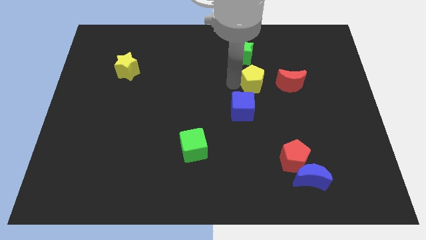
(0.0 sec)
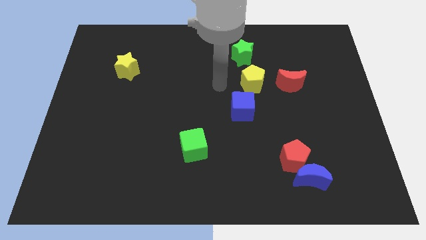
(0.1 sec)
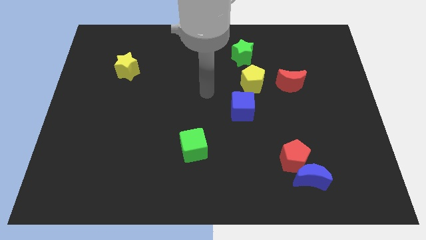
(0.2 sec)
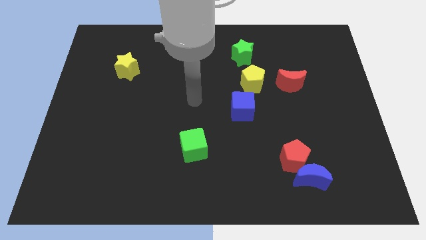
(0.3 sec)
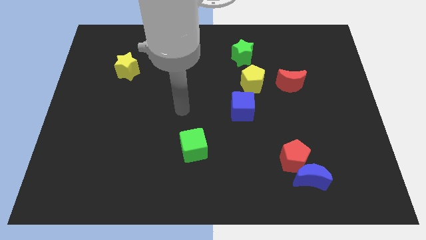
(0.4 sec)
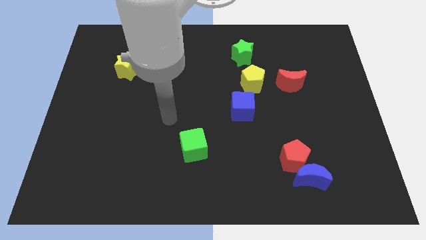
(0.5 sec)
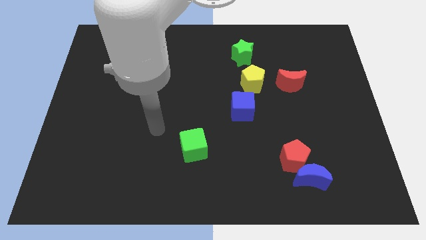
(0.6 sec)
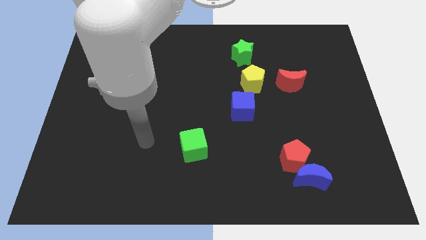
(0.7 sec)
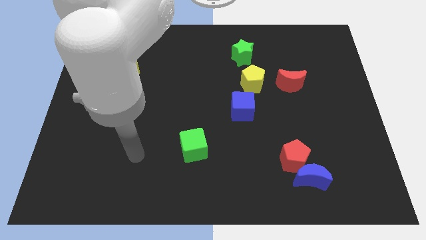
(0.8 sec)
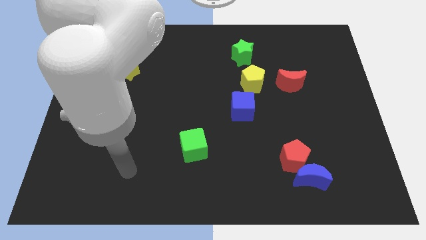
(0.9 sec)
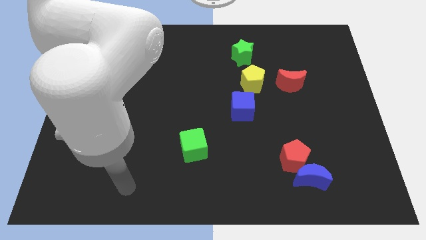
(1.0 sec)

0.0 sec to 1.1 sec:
go away from the yellow pentagon

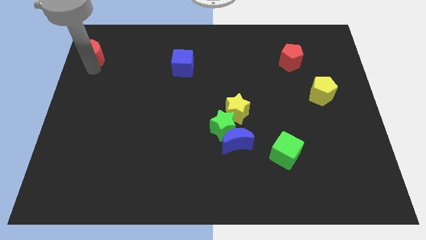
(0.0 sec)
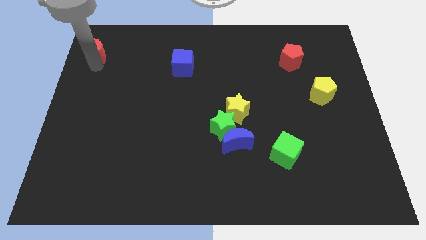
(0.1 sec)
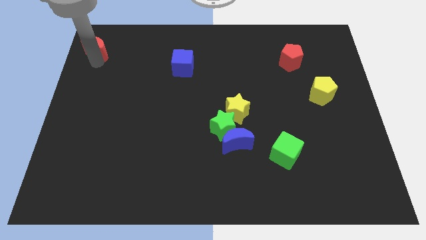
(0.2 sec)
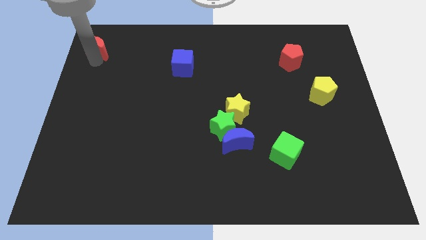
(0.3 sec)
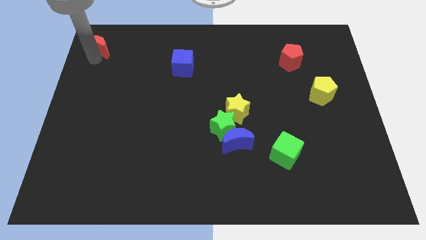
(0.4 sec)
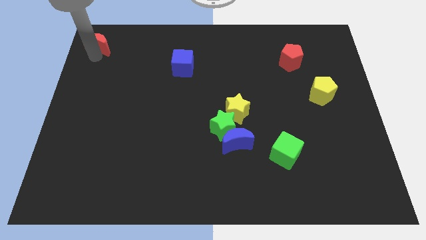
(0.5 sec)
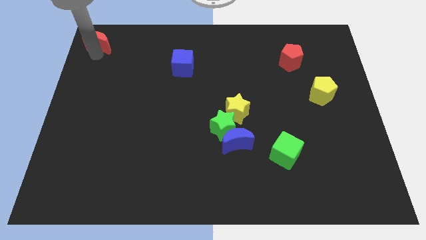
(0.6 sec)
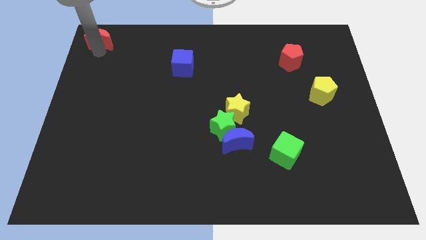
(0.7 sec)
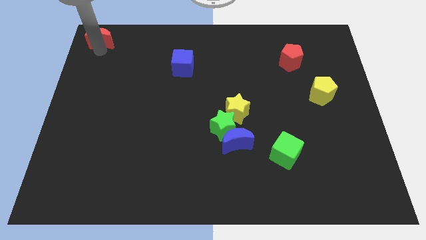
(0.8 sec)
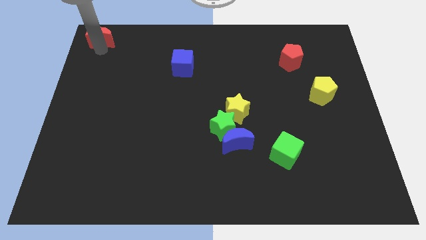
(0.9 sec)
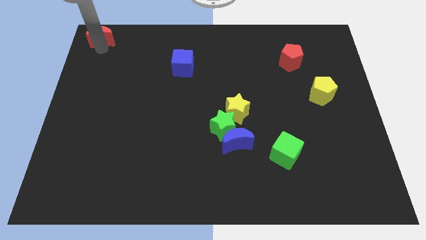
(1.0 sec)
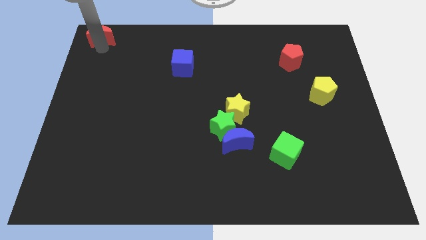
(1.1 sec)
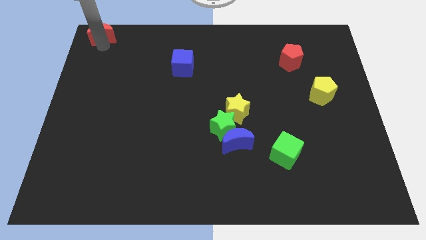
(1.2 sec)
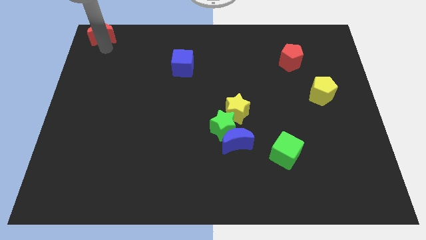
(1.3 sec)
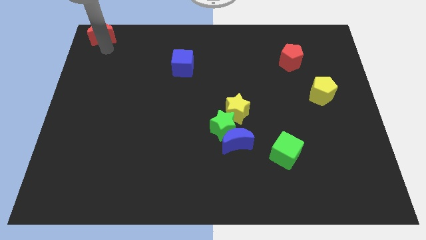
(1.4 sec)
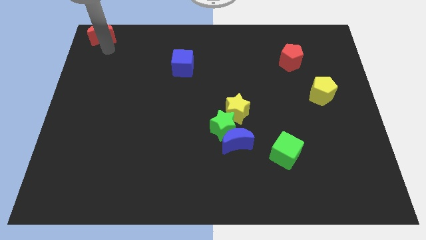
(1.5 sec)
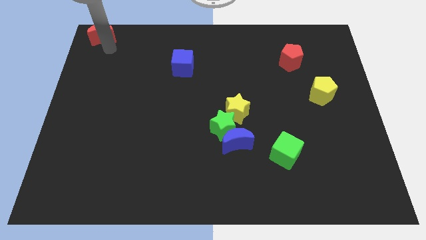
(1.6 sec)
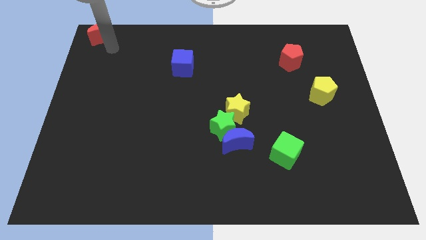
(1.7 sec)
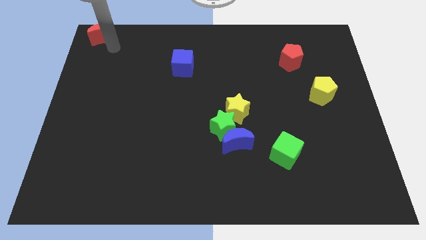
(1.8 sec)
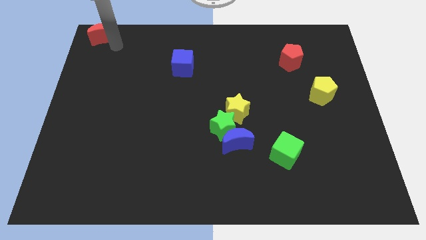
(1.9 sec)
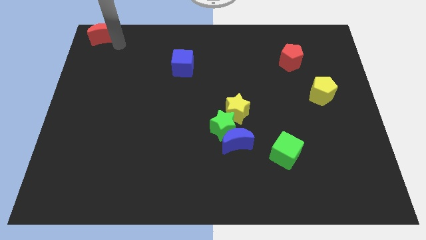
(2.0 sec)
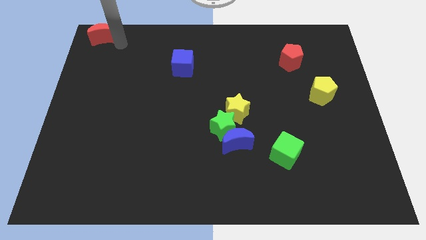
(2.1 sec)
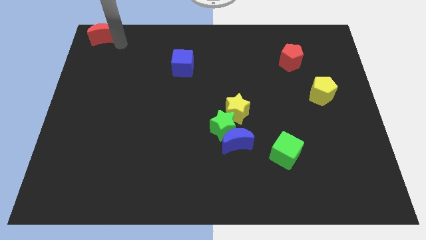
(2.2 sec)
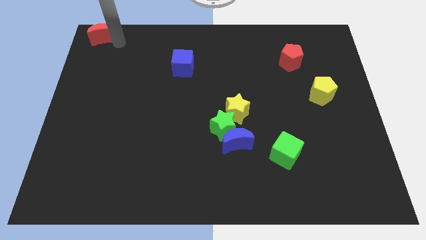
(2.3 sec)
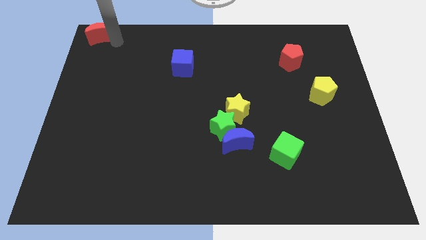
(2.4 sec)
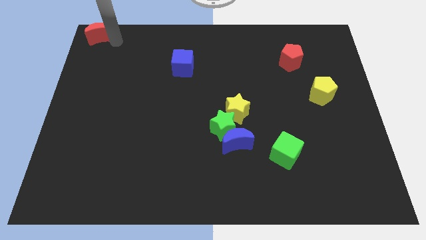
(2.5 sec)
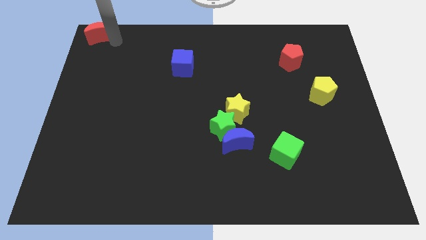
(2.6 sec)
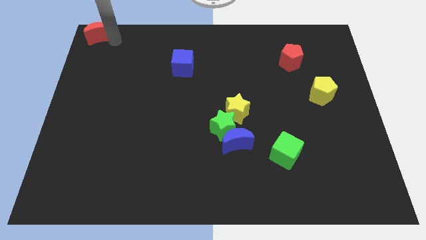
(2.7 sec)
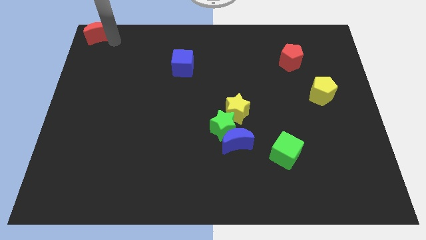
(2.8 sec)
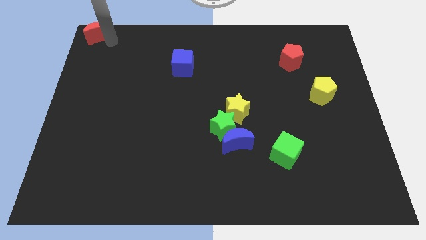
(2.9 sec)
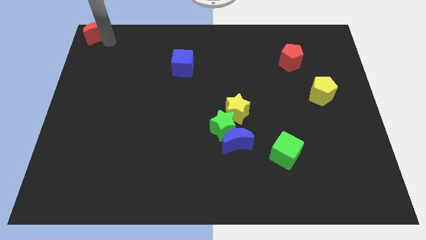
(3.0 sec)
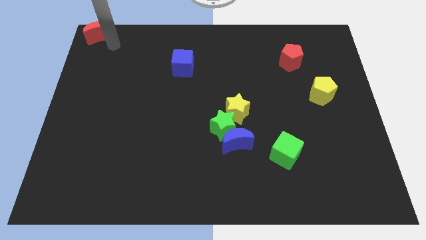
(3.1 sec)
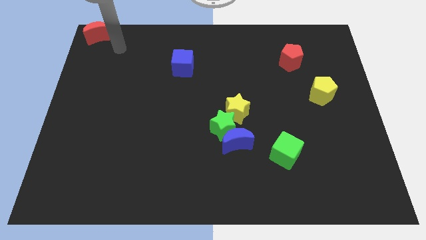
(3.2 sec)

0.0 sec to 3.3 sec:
place the red moon to the top left corner side

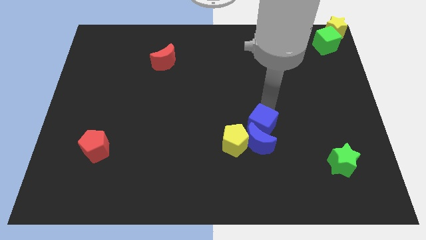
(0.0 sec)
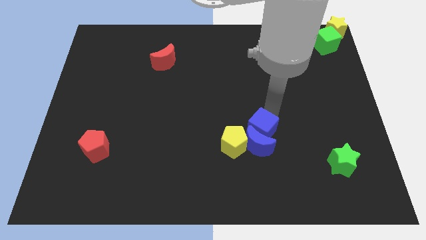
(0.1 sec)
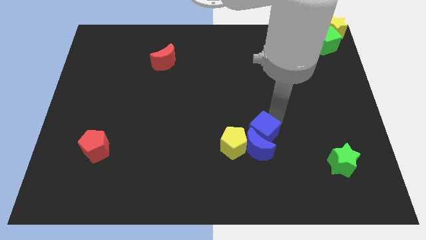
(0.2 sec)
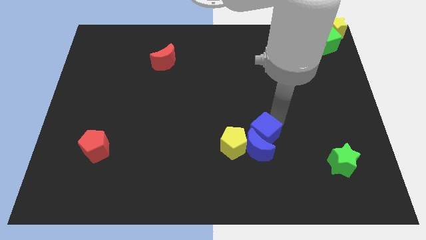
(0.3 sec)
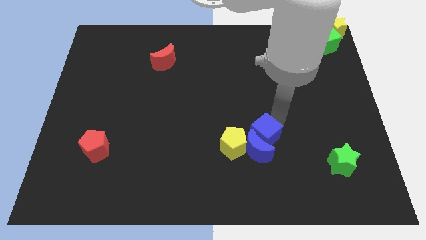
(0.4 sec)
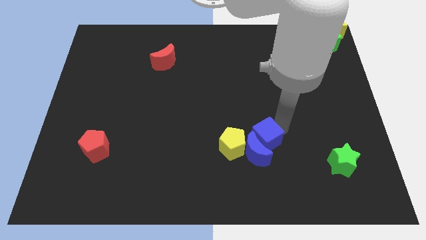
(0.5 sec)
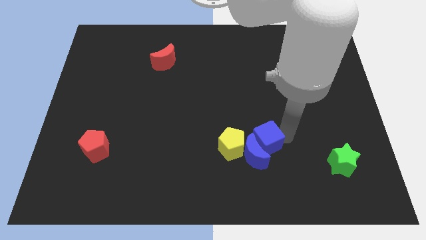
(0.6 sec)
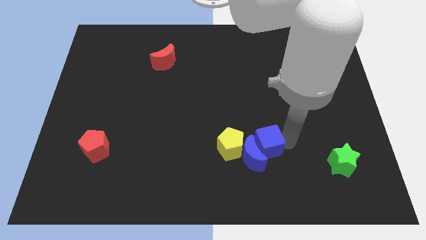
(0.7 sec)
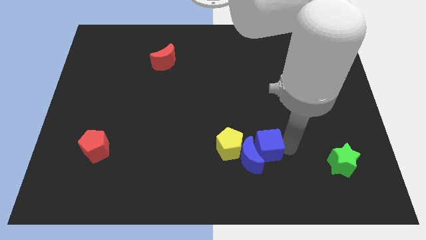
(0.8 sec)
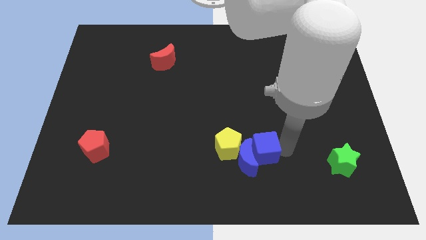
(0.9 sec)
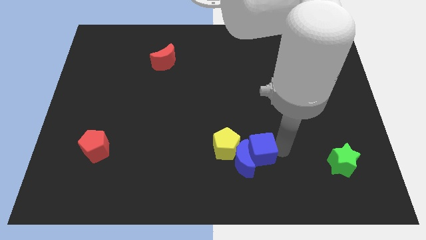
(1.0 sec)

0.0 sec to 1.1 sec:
move the blue cube to the right of the blue crescent

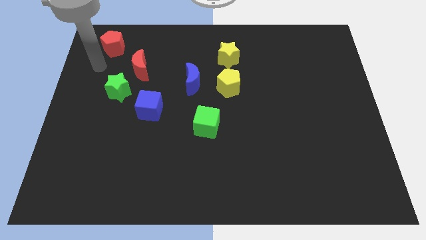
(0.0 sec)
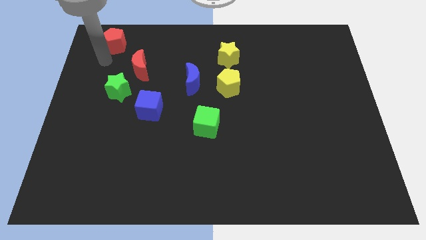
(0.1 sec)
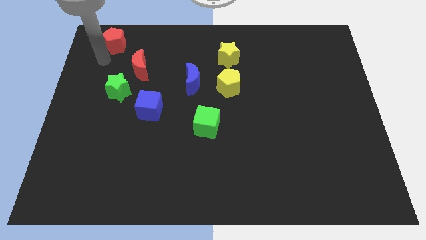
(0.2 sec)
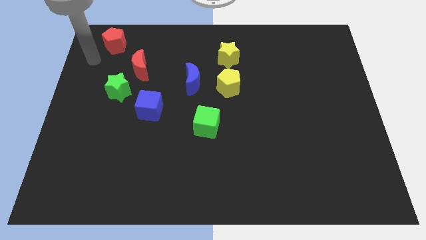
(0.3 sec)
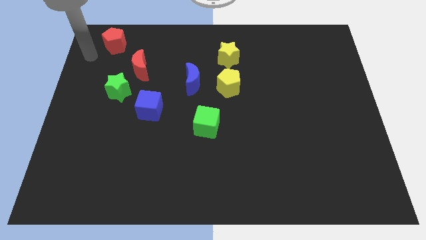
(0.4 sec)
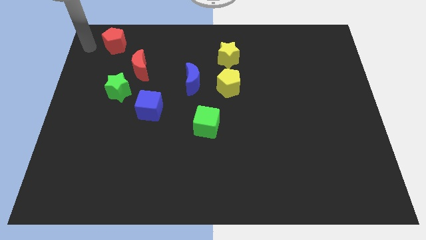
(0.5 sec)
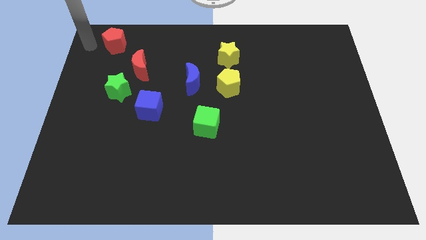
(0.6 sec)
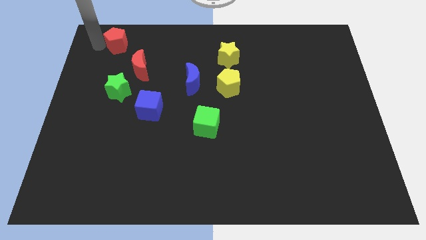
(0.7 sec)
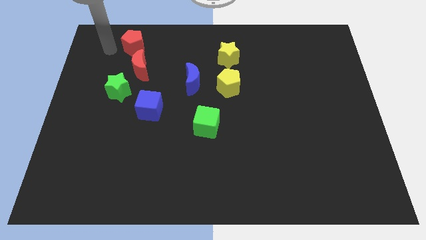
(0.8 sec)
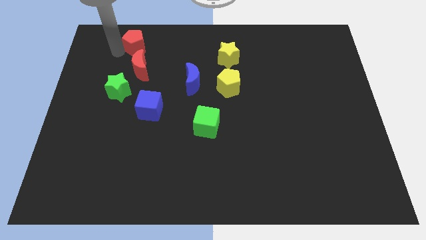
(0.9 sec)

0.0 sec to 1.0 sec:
push red pentagon above red crescent

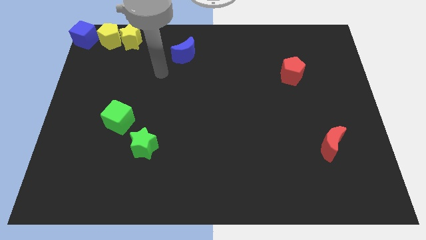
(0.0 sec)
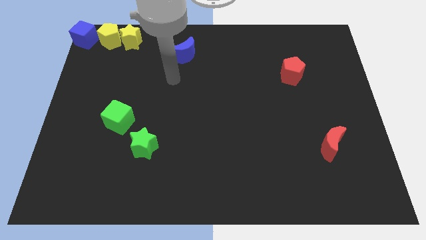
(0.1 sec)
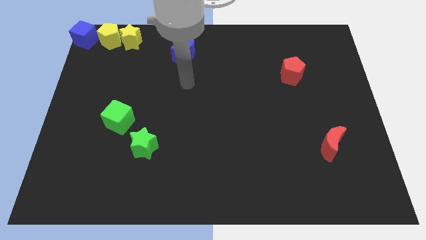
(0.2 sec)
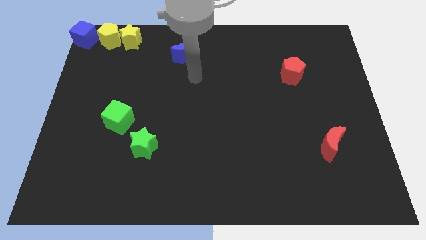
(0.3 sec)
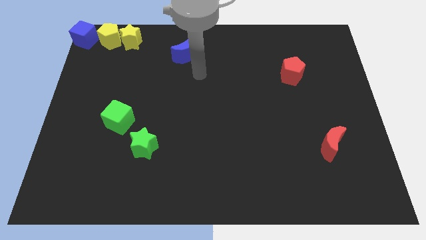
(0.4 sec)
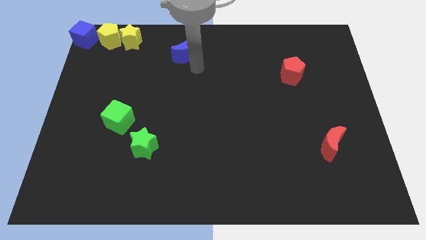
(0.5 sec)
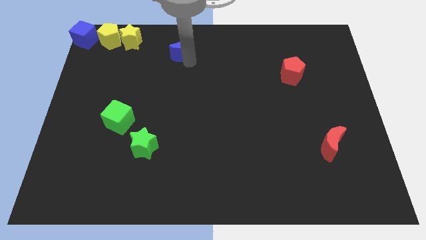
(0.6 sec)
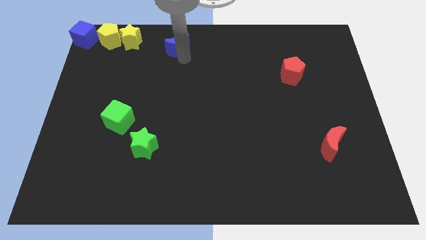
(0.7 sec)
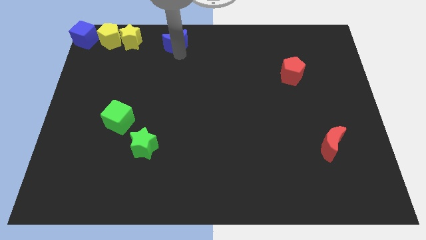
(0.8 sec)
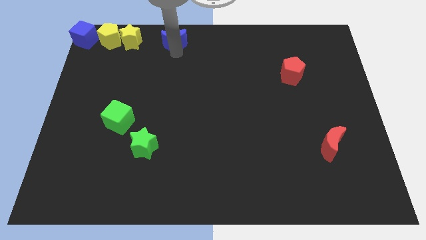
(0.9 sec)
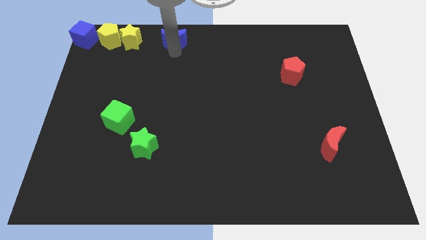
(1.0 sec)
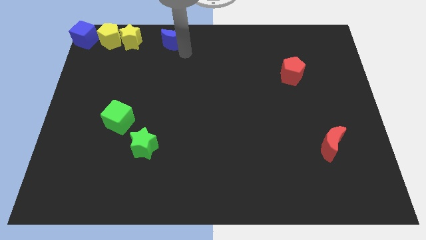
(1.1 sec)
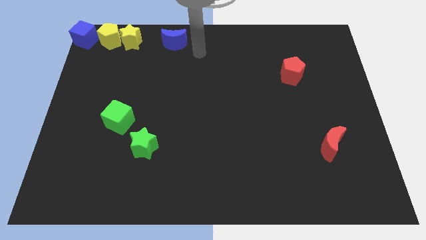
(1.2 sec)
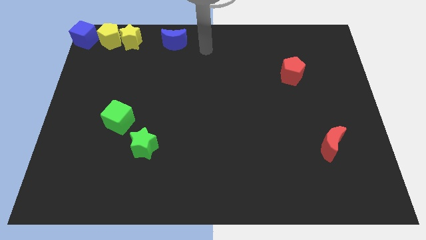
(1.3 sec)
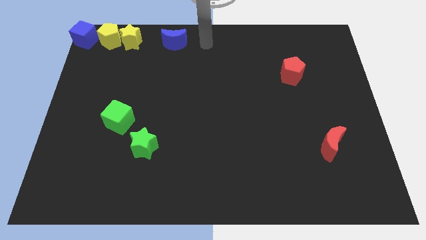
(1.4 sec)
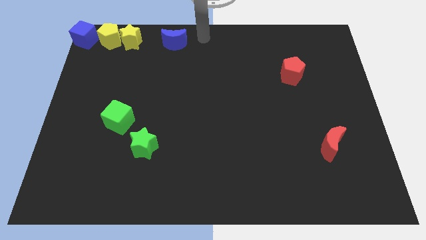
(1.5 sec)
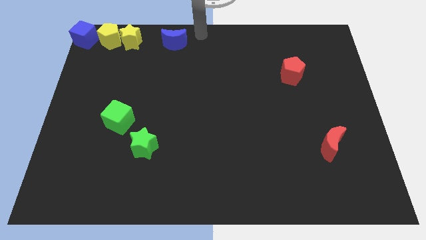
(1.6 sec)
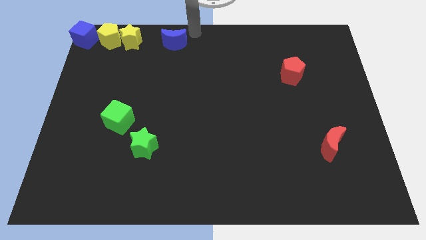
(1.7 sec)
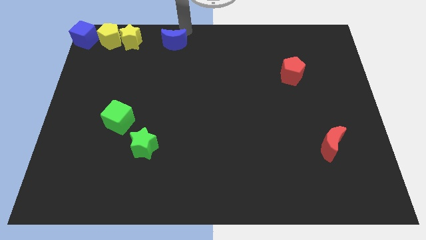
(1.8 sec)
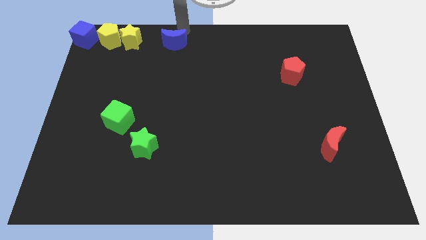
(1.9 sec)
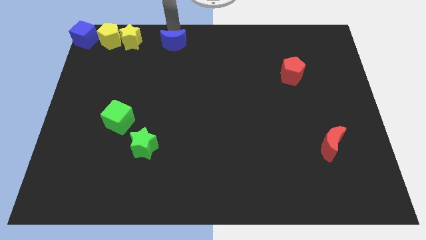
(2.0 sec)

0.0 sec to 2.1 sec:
move the blue crescent towards up

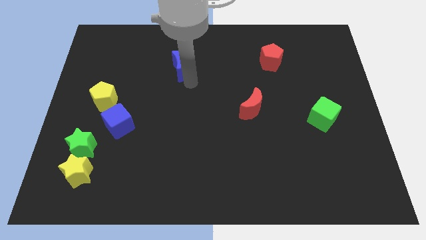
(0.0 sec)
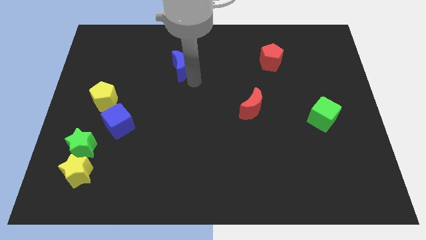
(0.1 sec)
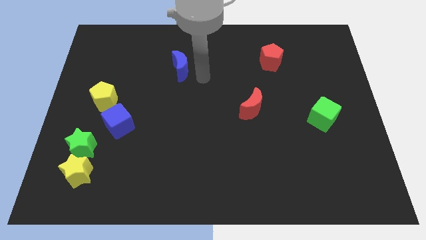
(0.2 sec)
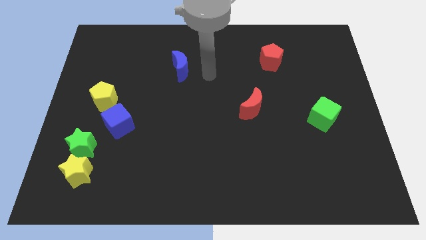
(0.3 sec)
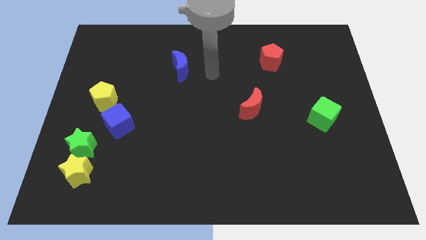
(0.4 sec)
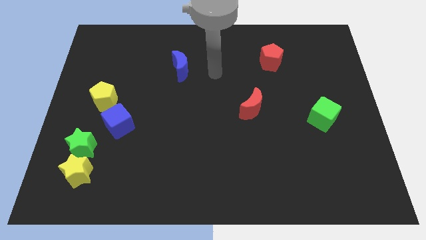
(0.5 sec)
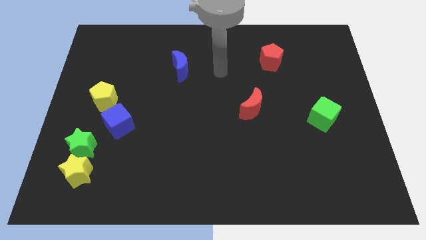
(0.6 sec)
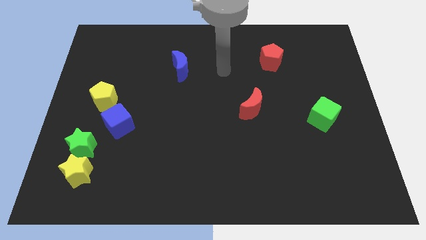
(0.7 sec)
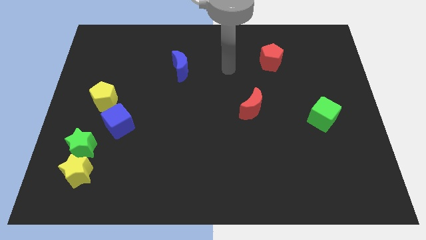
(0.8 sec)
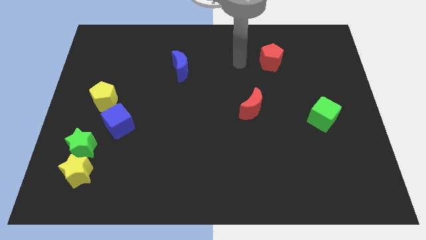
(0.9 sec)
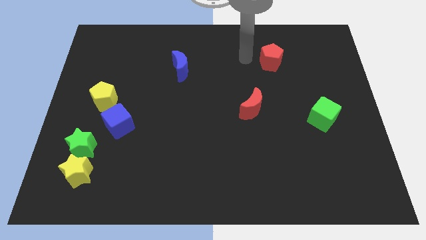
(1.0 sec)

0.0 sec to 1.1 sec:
place your arm at the left of the red pentagon
